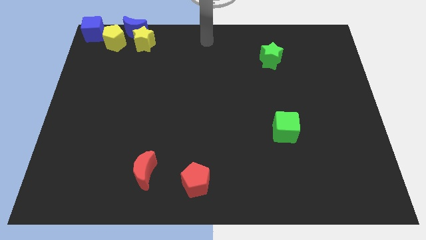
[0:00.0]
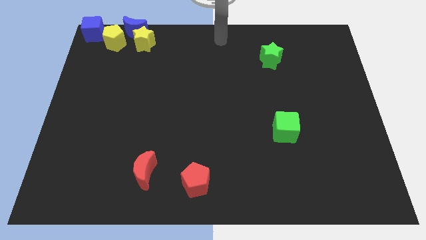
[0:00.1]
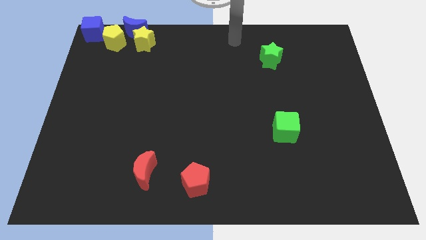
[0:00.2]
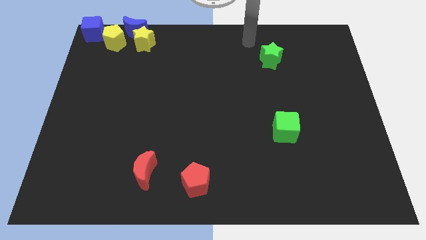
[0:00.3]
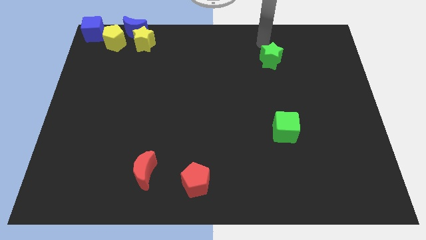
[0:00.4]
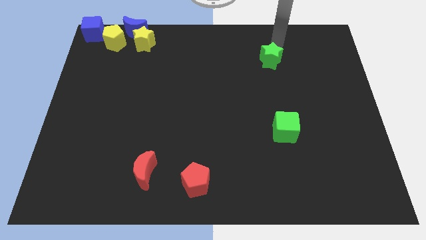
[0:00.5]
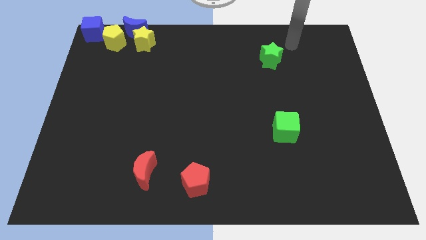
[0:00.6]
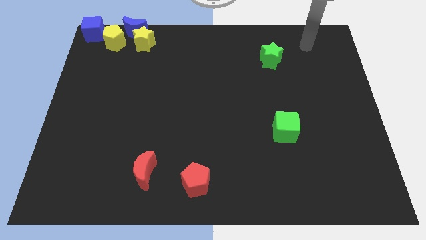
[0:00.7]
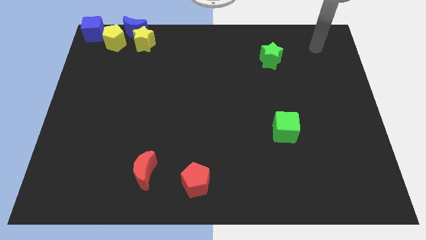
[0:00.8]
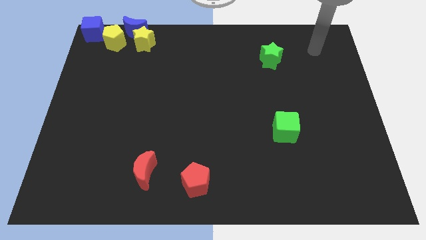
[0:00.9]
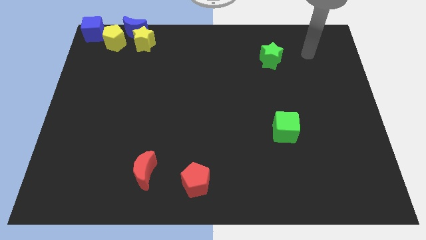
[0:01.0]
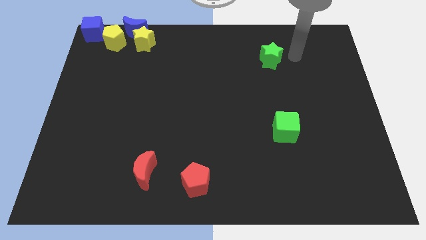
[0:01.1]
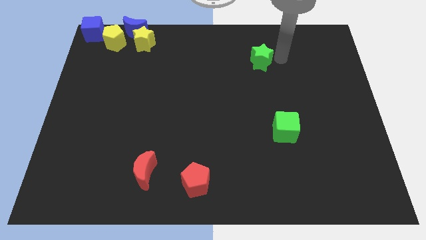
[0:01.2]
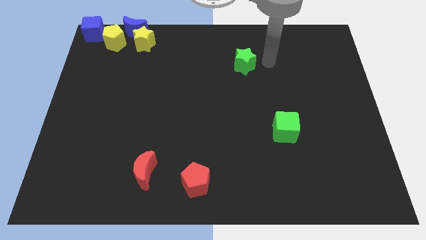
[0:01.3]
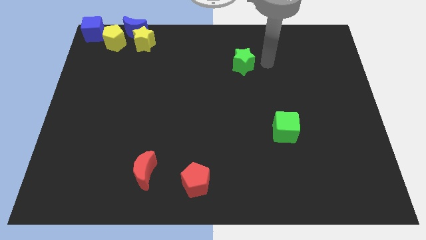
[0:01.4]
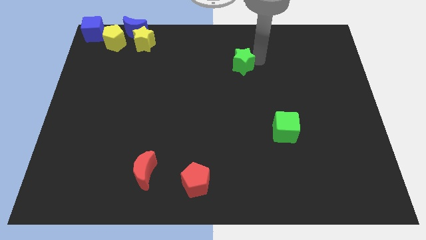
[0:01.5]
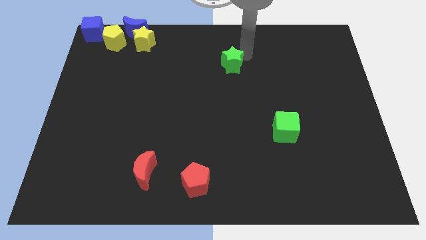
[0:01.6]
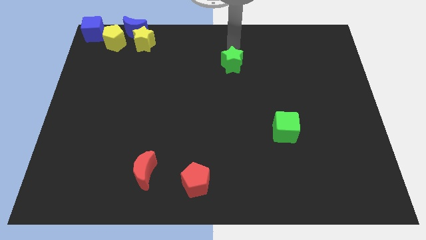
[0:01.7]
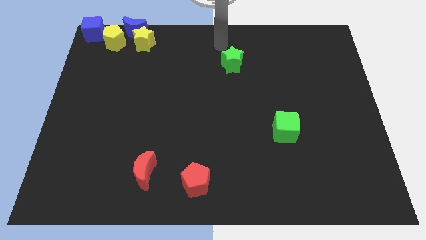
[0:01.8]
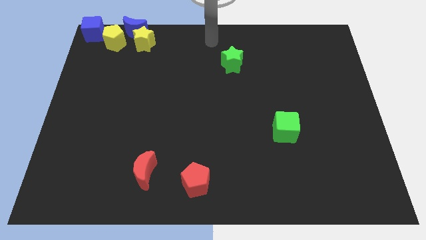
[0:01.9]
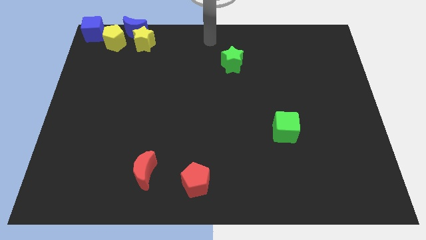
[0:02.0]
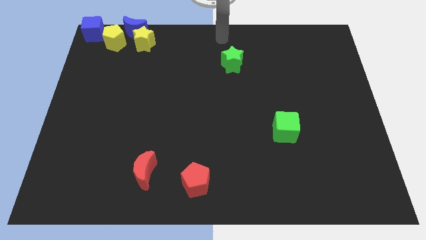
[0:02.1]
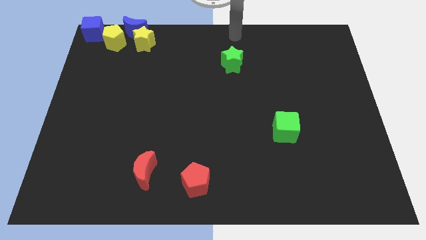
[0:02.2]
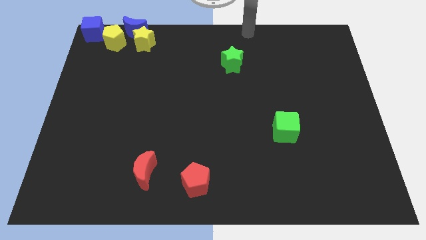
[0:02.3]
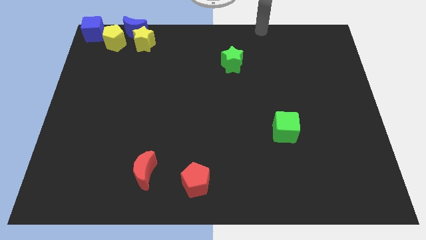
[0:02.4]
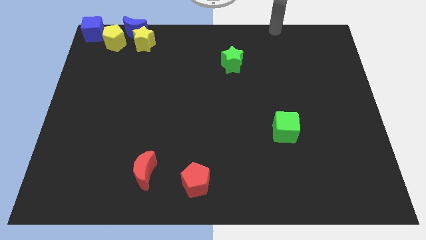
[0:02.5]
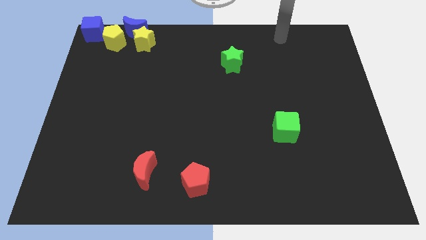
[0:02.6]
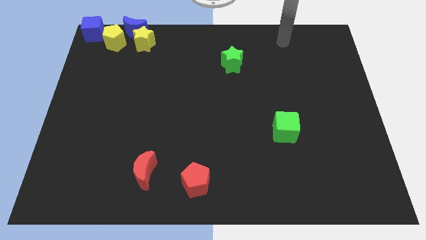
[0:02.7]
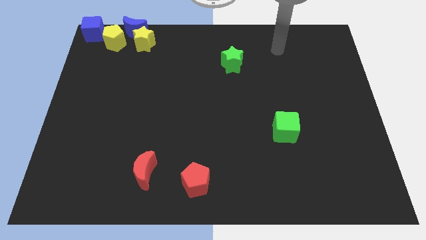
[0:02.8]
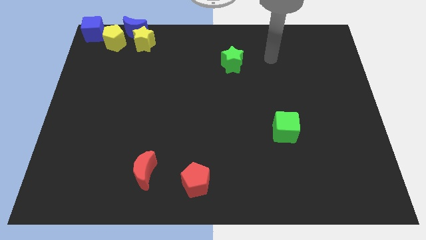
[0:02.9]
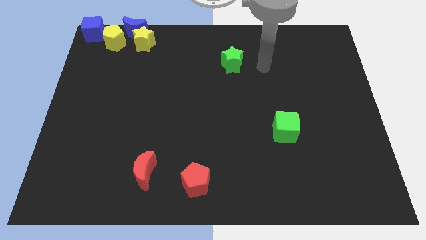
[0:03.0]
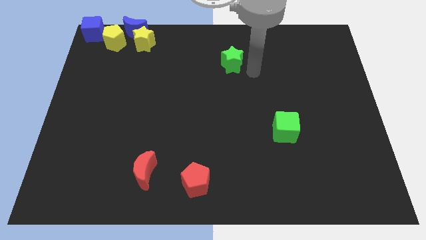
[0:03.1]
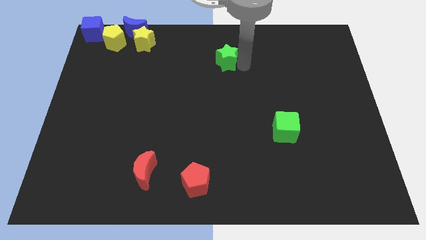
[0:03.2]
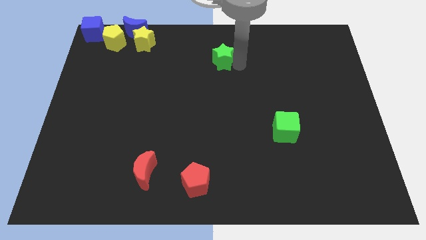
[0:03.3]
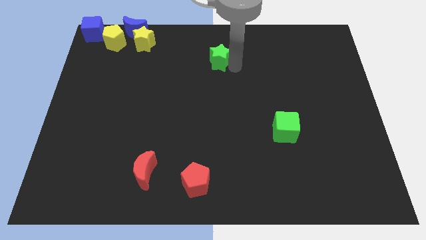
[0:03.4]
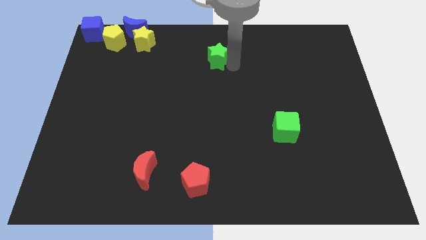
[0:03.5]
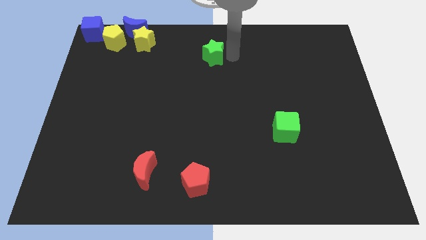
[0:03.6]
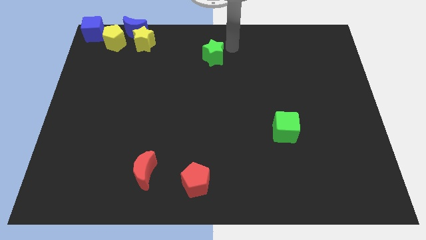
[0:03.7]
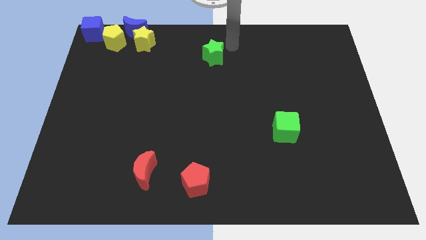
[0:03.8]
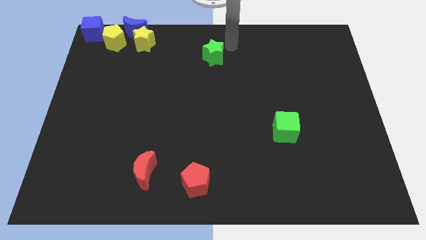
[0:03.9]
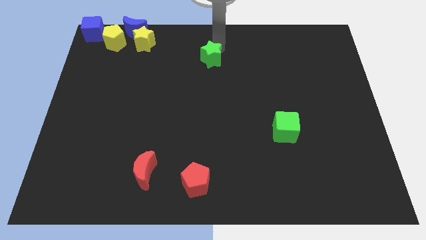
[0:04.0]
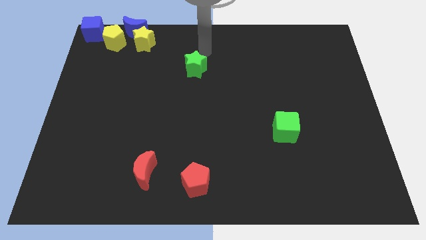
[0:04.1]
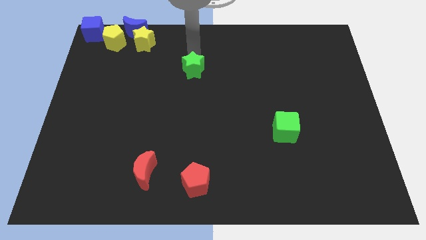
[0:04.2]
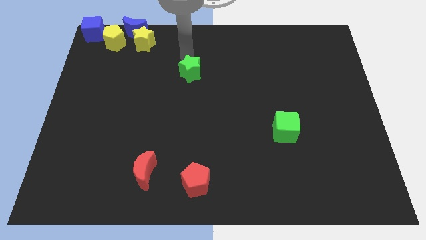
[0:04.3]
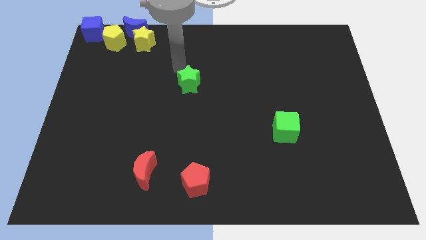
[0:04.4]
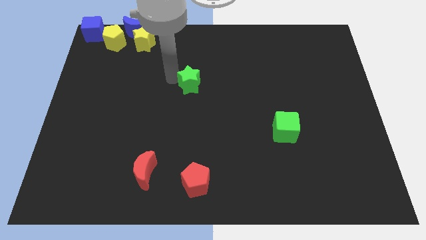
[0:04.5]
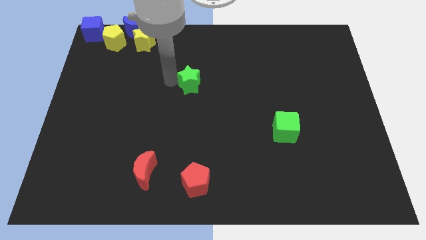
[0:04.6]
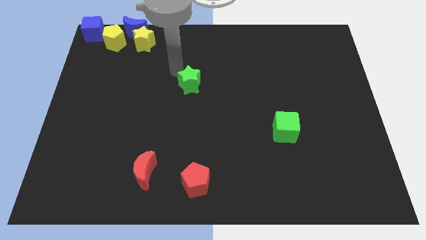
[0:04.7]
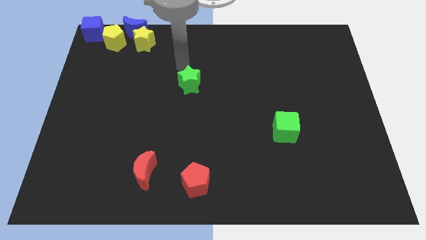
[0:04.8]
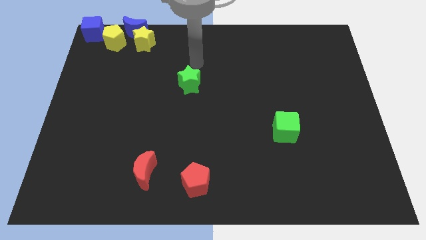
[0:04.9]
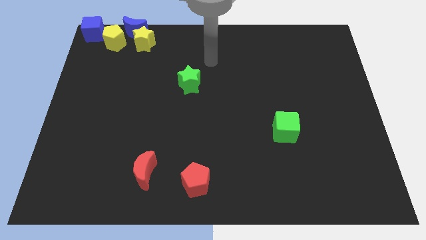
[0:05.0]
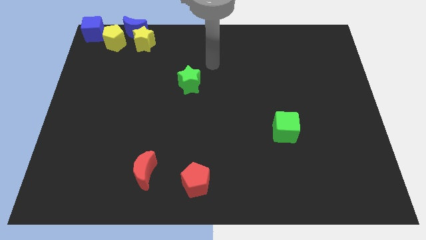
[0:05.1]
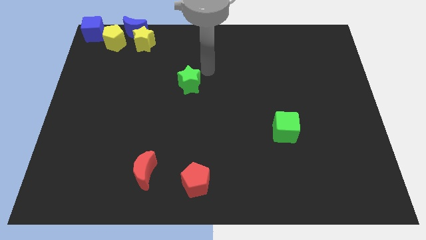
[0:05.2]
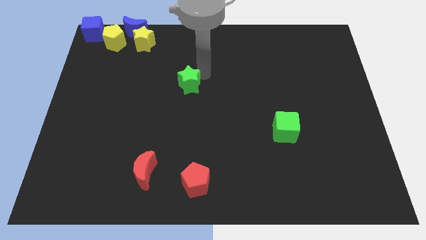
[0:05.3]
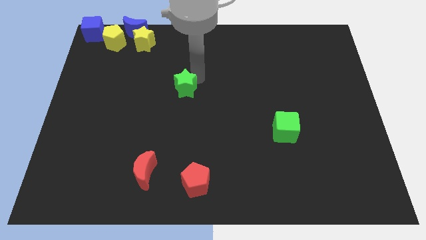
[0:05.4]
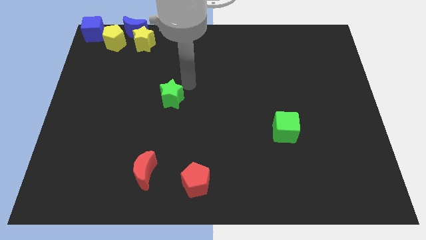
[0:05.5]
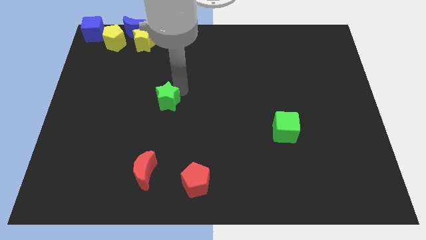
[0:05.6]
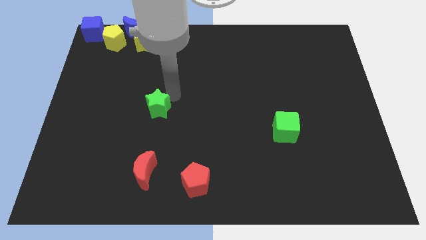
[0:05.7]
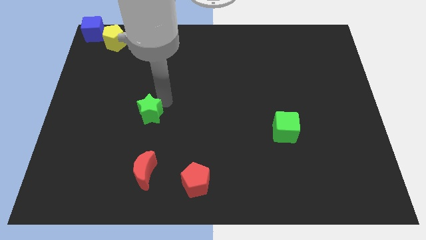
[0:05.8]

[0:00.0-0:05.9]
place the green star above the red crescent

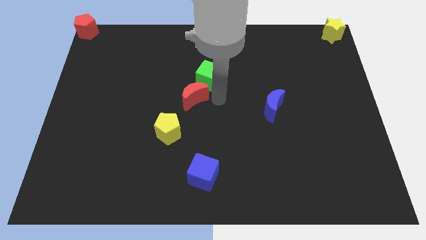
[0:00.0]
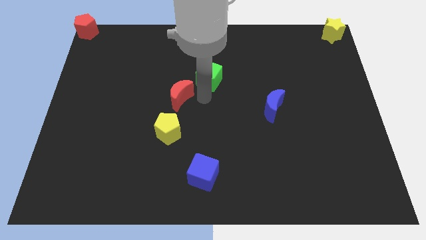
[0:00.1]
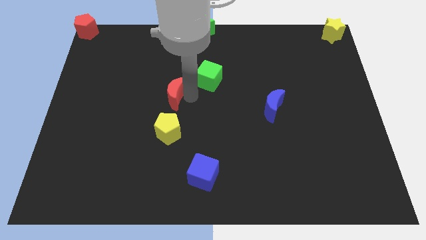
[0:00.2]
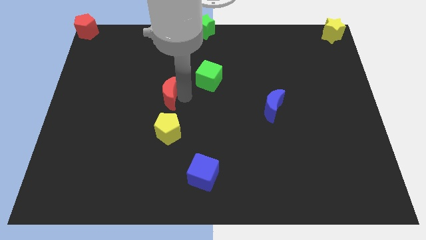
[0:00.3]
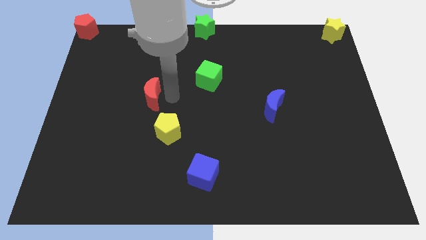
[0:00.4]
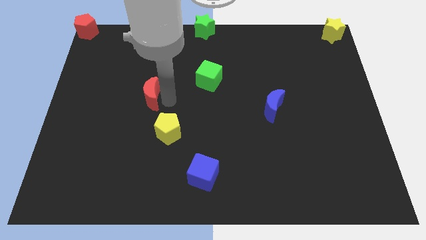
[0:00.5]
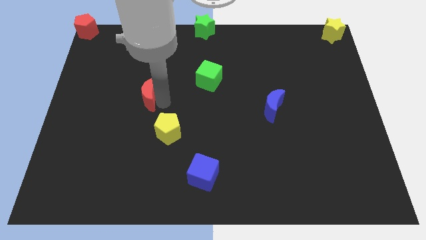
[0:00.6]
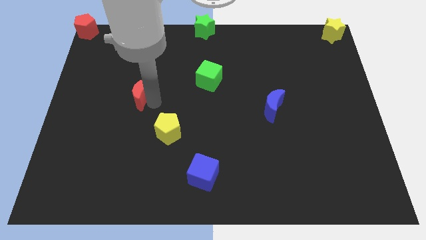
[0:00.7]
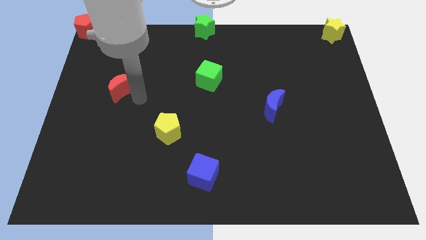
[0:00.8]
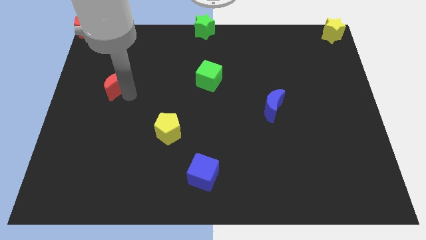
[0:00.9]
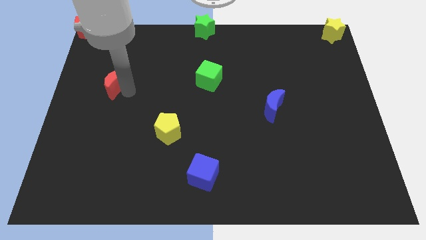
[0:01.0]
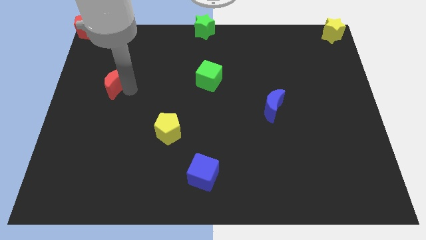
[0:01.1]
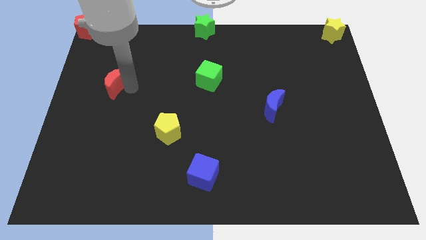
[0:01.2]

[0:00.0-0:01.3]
drag the red crescent towards the left side of the board

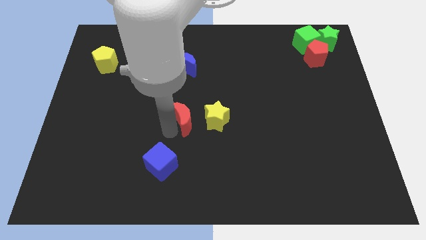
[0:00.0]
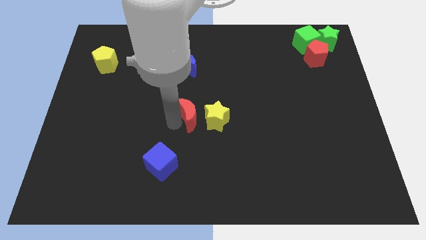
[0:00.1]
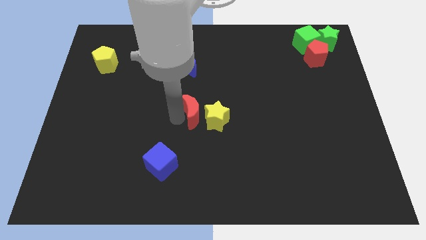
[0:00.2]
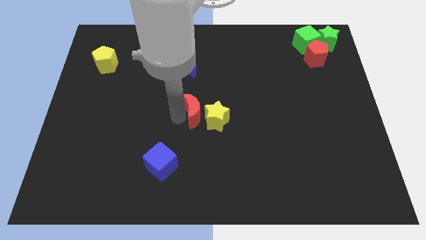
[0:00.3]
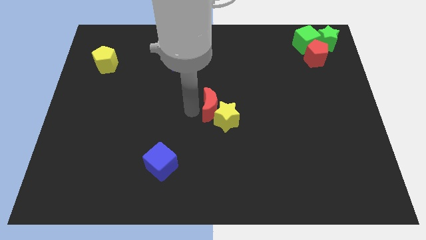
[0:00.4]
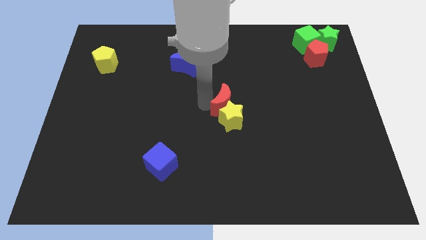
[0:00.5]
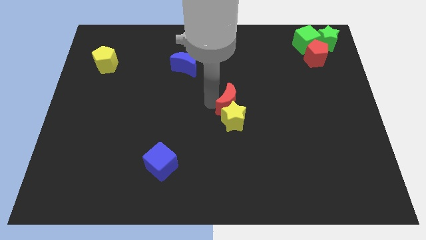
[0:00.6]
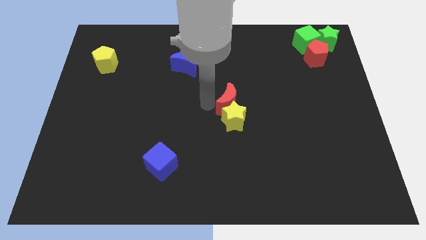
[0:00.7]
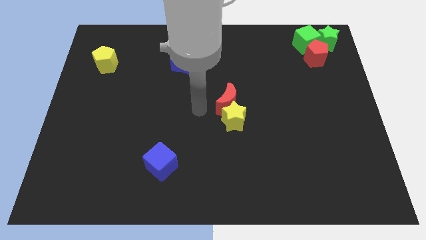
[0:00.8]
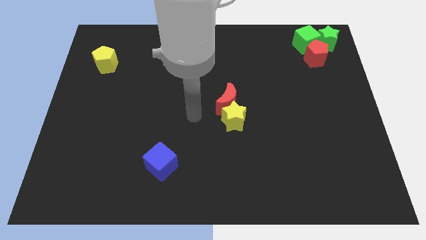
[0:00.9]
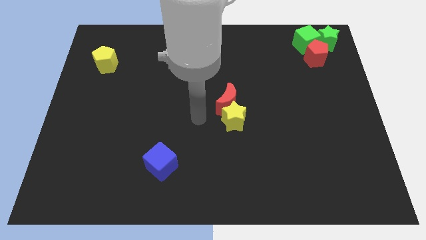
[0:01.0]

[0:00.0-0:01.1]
move the red crescent to the top of the yellow star

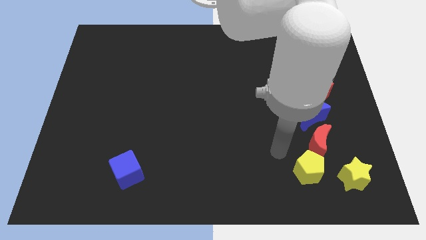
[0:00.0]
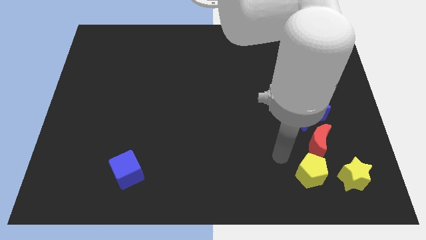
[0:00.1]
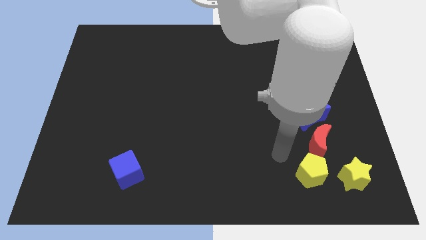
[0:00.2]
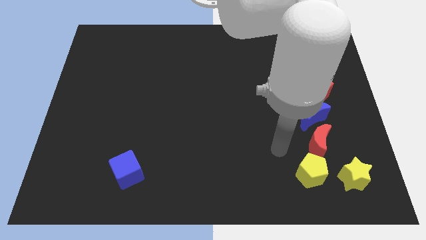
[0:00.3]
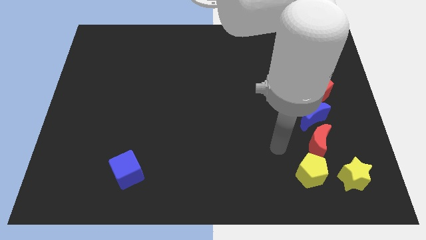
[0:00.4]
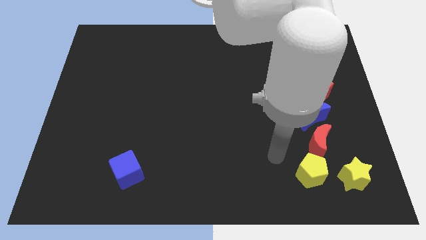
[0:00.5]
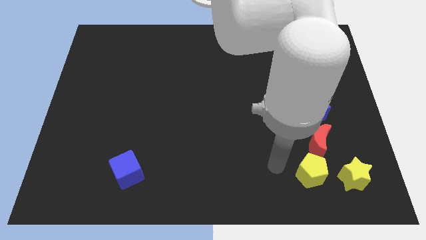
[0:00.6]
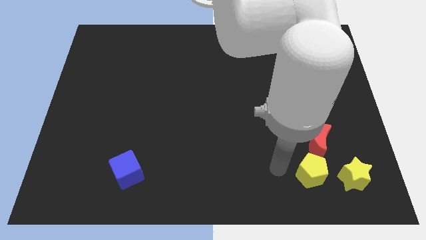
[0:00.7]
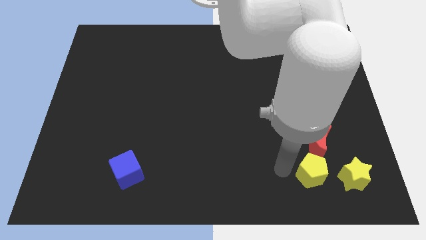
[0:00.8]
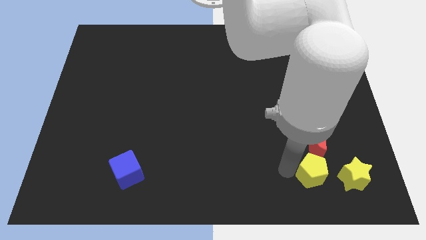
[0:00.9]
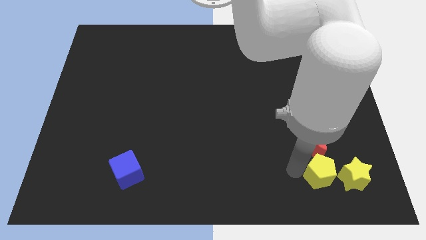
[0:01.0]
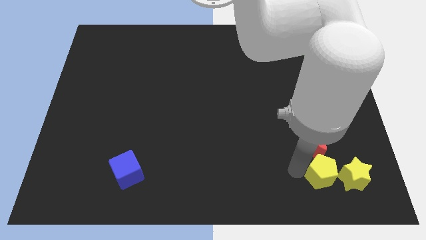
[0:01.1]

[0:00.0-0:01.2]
push the yellow pentagon to the left of the yellow star
